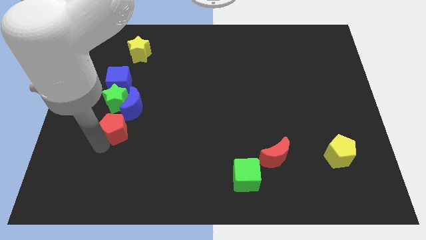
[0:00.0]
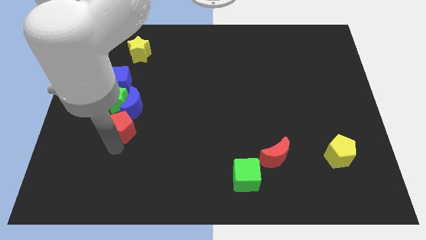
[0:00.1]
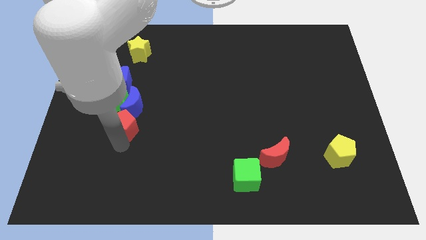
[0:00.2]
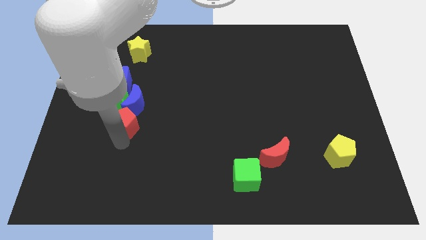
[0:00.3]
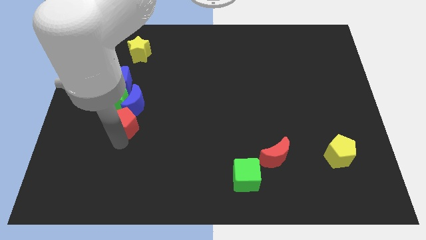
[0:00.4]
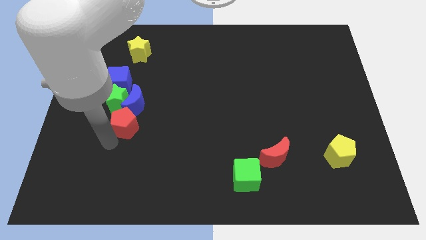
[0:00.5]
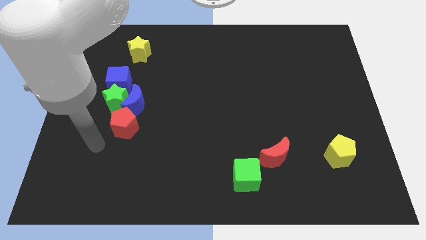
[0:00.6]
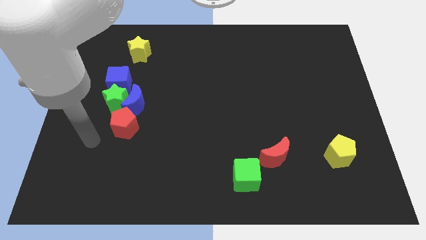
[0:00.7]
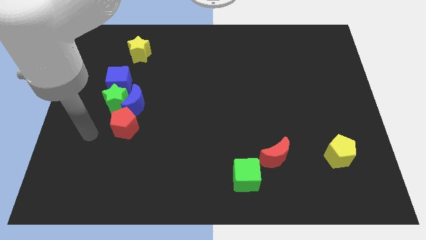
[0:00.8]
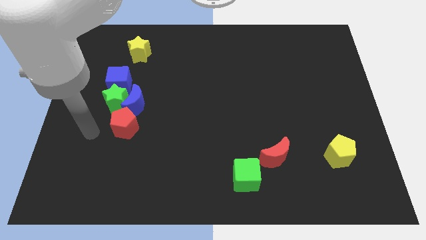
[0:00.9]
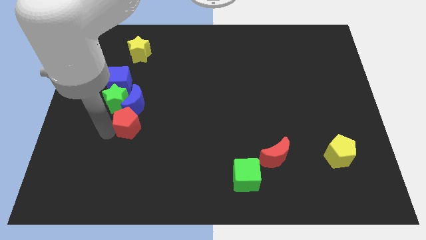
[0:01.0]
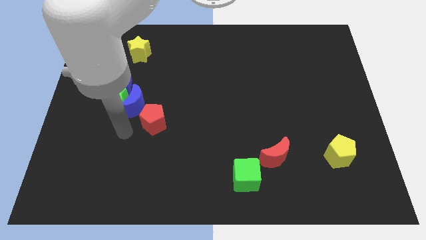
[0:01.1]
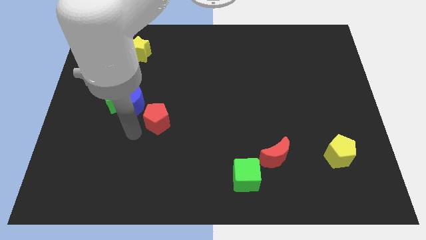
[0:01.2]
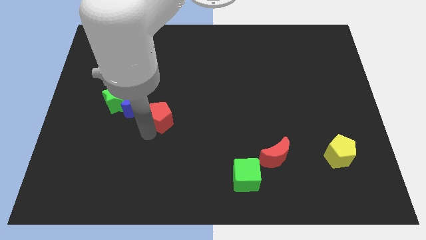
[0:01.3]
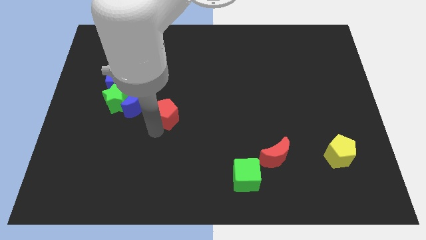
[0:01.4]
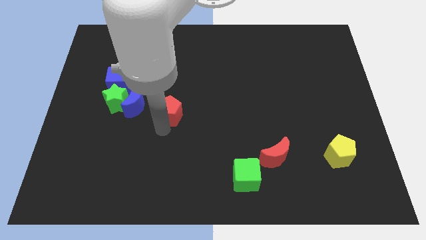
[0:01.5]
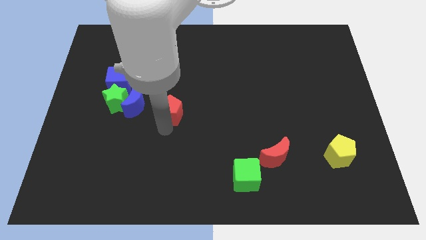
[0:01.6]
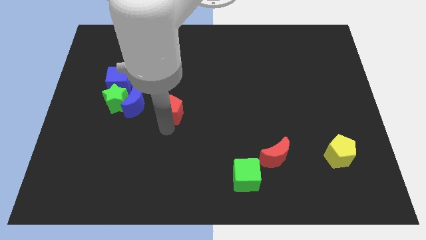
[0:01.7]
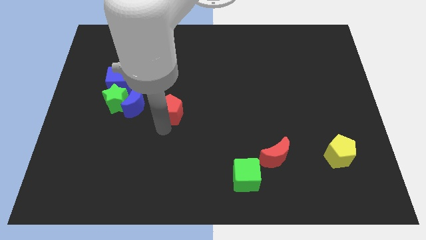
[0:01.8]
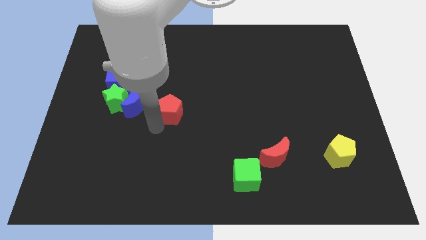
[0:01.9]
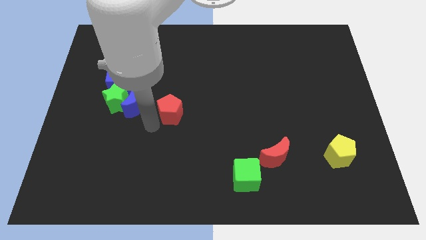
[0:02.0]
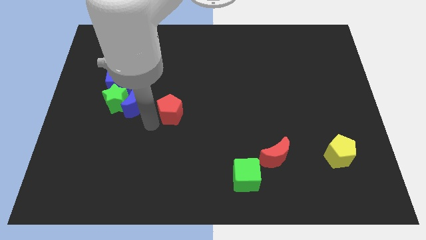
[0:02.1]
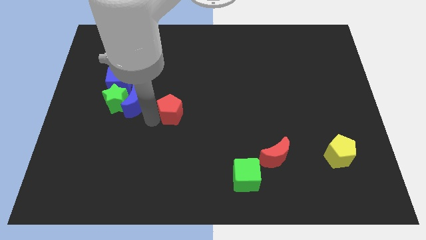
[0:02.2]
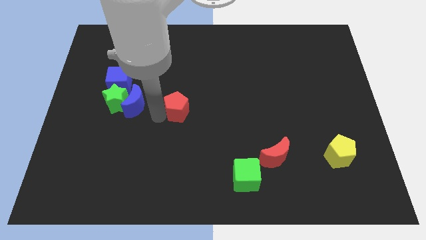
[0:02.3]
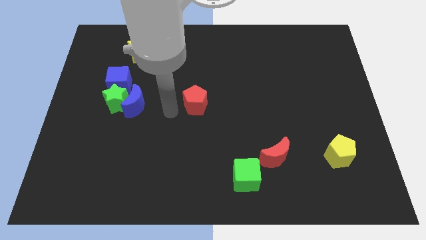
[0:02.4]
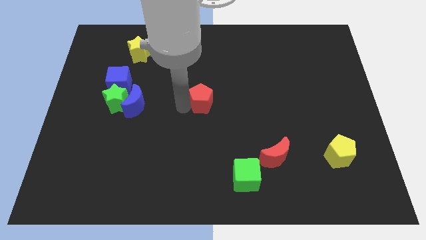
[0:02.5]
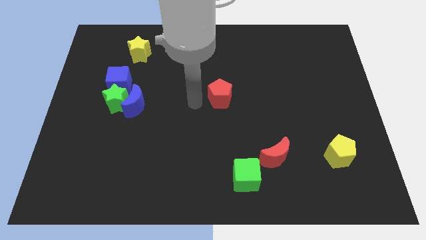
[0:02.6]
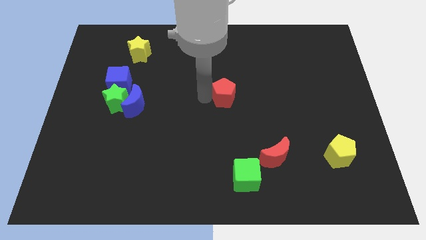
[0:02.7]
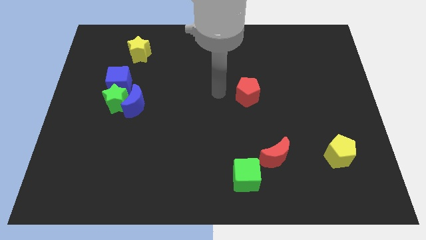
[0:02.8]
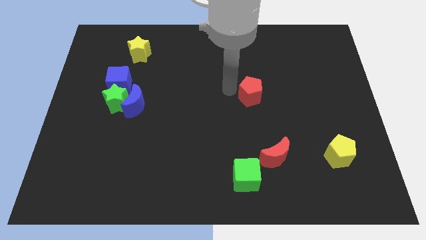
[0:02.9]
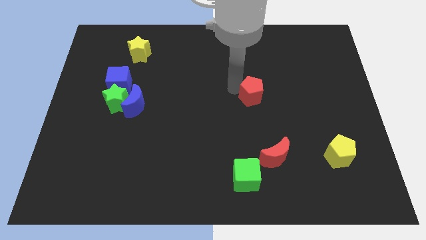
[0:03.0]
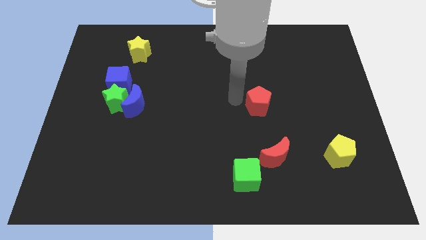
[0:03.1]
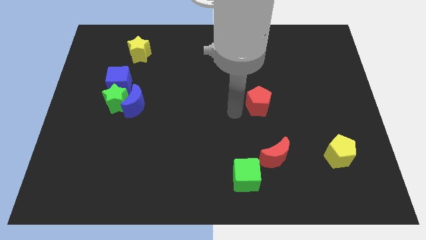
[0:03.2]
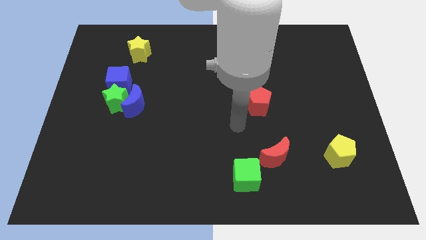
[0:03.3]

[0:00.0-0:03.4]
put the red pentagon at the top side of the red moon

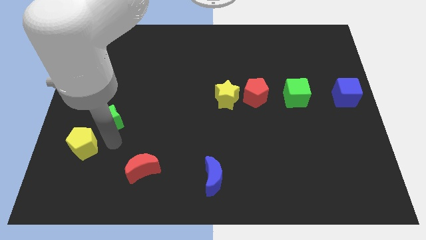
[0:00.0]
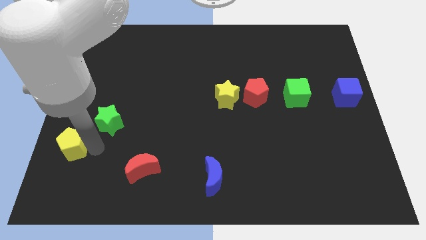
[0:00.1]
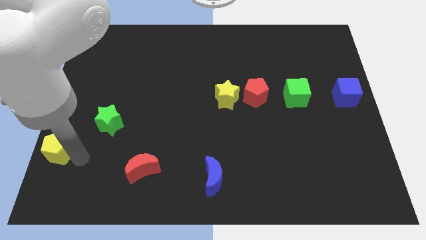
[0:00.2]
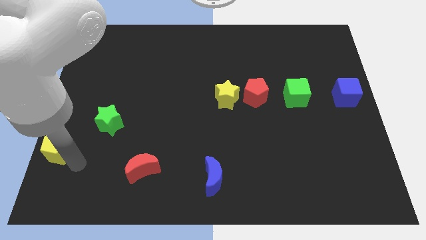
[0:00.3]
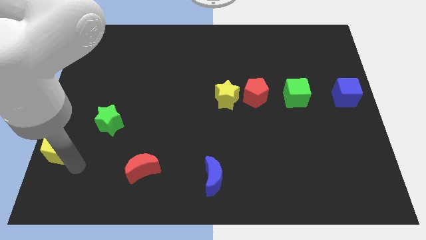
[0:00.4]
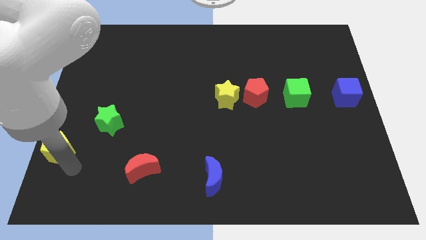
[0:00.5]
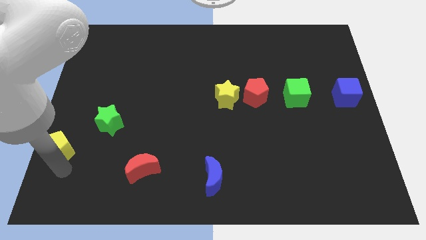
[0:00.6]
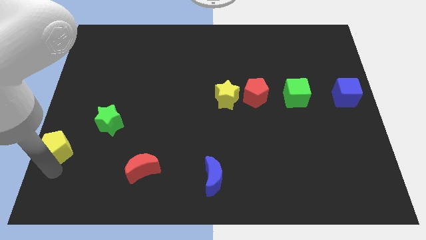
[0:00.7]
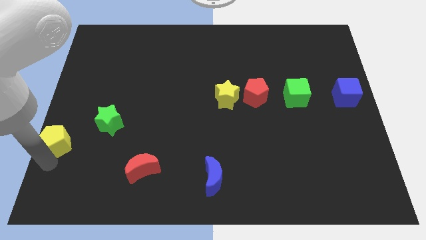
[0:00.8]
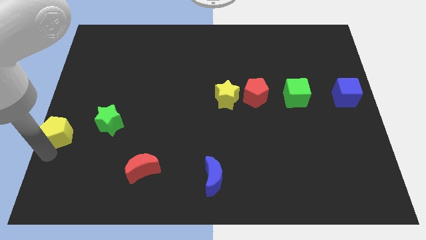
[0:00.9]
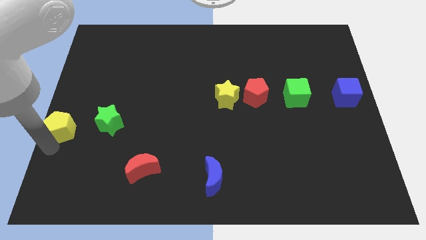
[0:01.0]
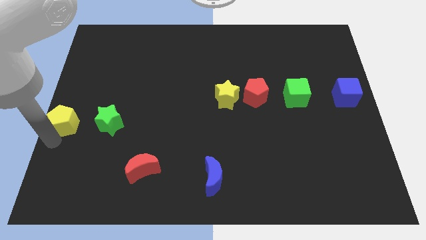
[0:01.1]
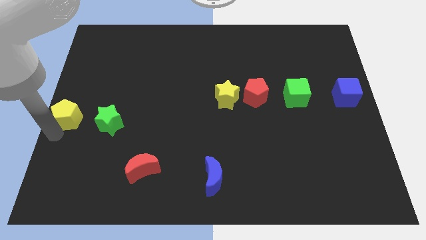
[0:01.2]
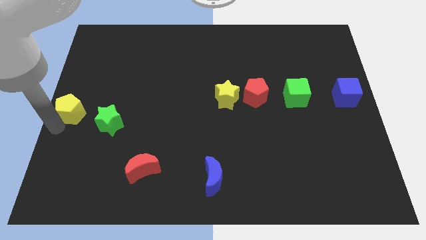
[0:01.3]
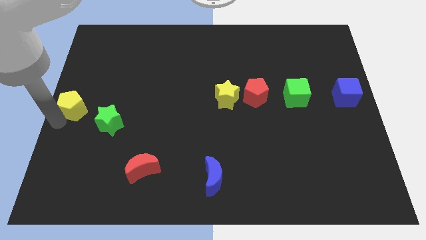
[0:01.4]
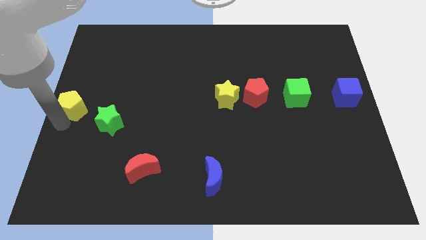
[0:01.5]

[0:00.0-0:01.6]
move the yellow pentagon to the left center of the board

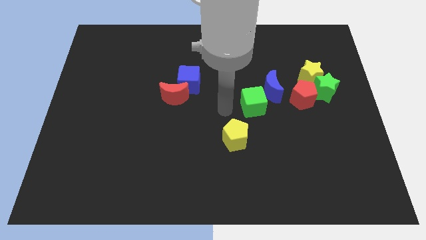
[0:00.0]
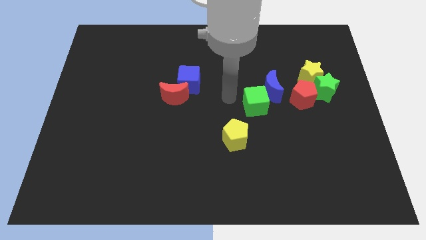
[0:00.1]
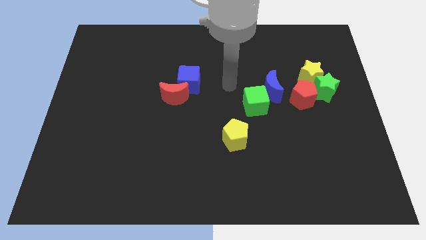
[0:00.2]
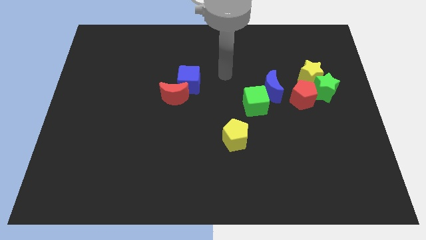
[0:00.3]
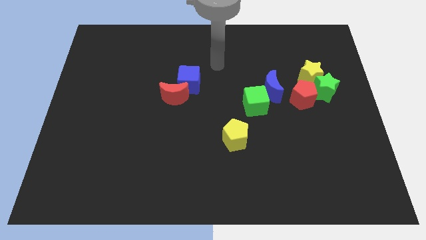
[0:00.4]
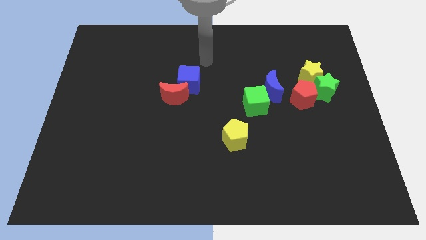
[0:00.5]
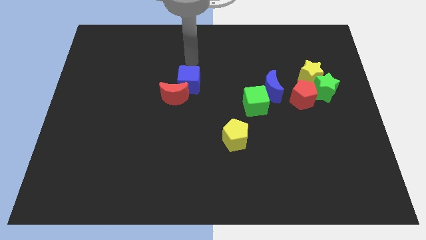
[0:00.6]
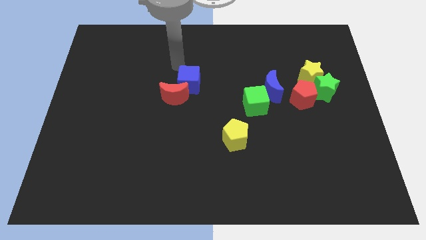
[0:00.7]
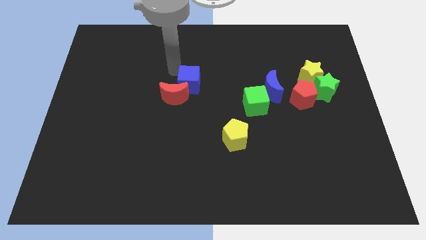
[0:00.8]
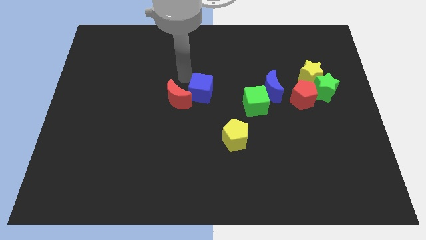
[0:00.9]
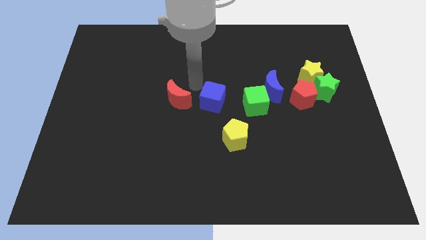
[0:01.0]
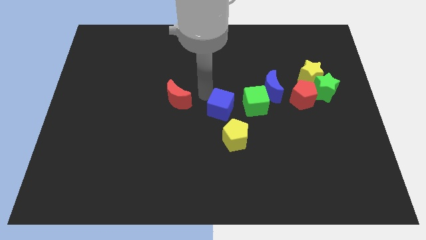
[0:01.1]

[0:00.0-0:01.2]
slightly push the blue cube to the right of the red pentagon

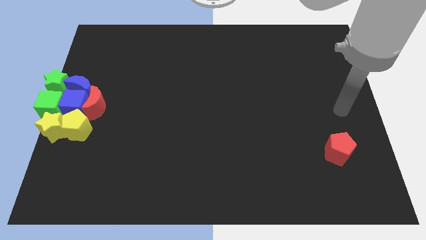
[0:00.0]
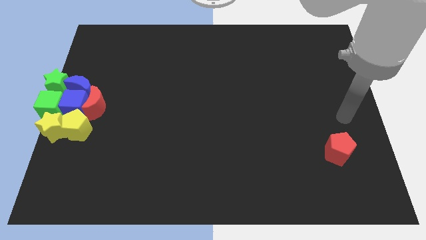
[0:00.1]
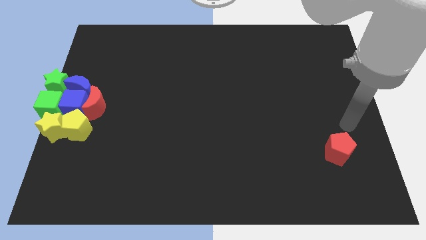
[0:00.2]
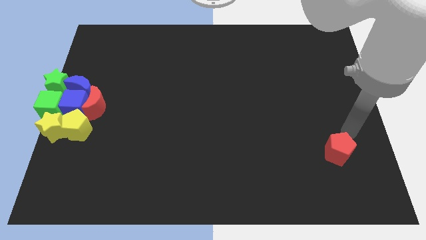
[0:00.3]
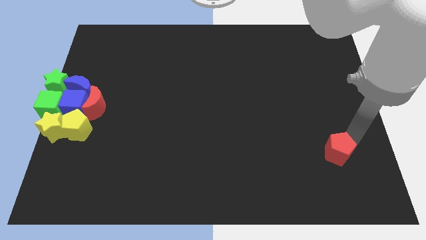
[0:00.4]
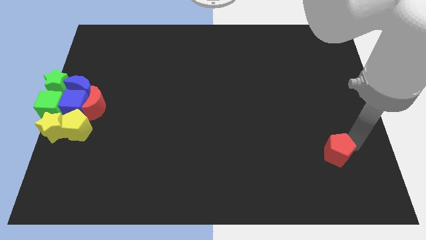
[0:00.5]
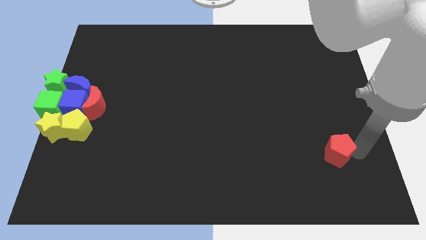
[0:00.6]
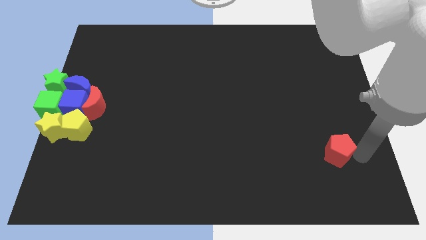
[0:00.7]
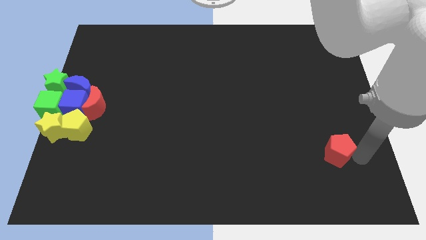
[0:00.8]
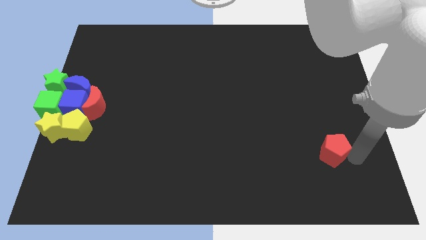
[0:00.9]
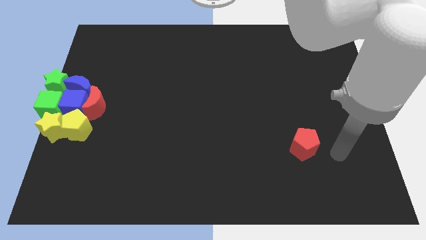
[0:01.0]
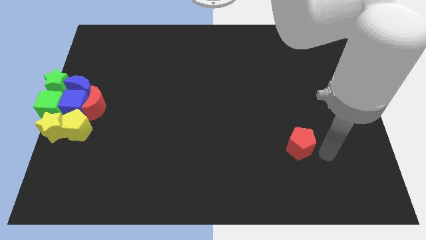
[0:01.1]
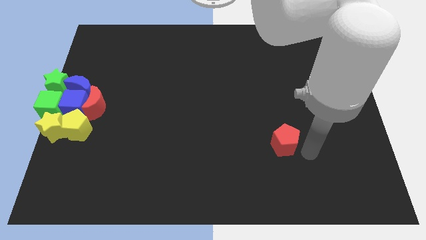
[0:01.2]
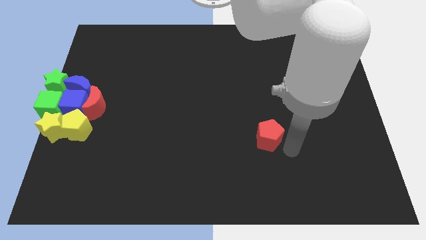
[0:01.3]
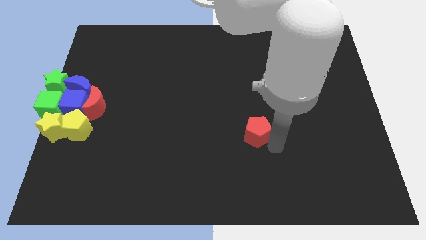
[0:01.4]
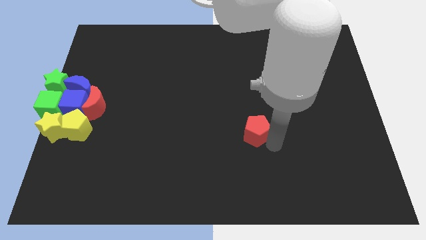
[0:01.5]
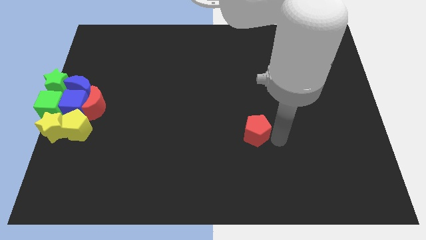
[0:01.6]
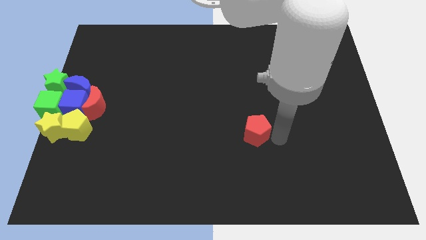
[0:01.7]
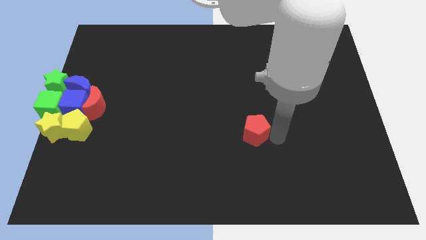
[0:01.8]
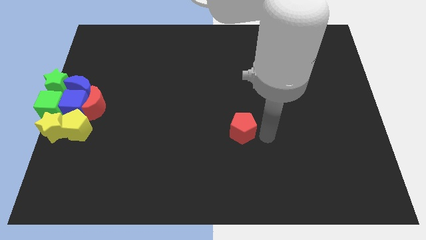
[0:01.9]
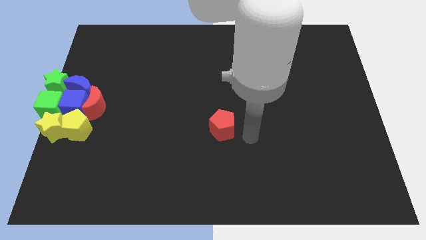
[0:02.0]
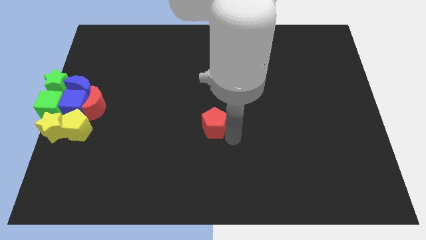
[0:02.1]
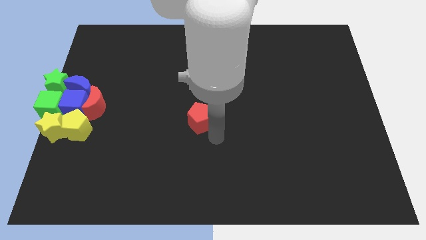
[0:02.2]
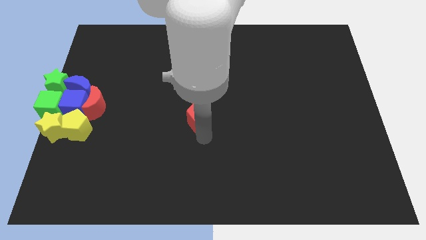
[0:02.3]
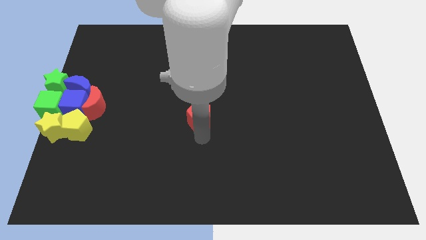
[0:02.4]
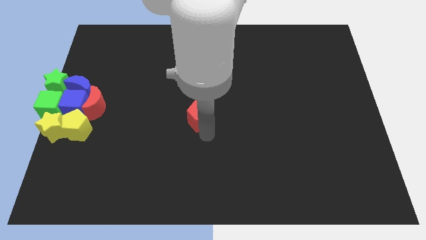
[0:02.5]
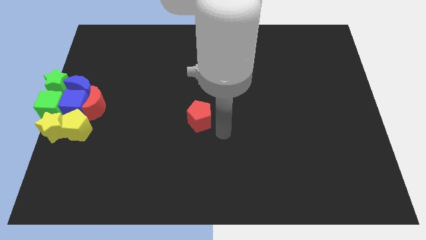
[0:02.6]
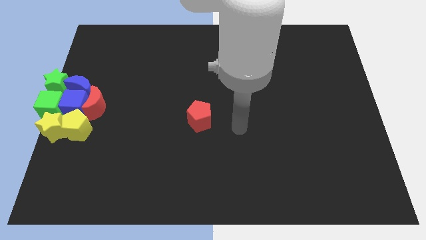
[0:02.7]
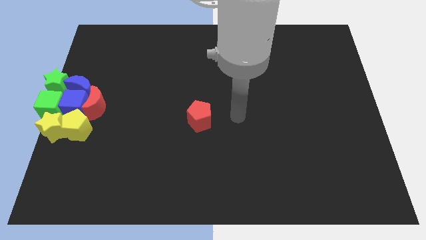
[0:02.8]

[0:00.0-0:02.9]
push the red pentagon to the center of board
